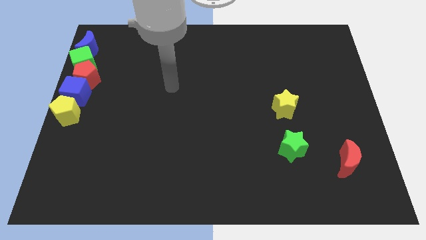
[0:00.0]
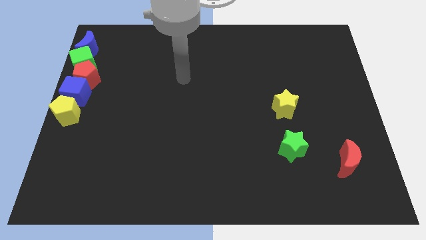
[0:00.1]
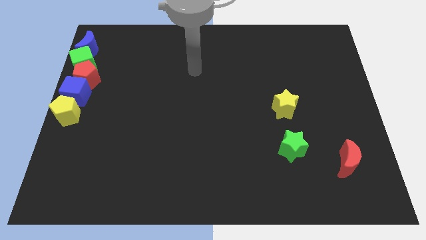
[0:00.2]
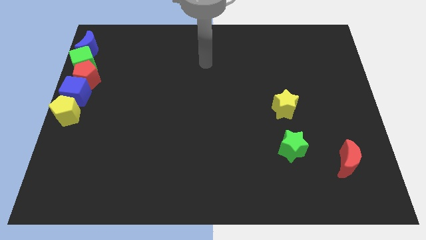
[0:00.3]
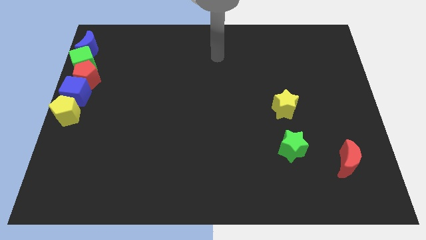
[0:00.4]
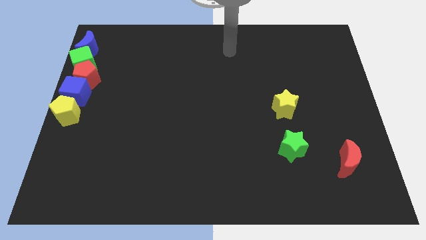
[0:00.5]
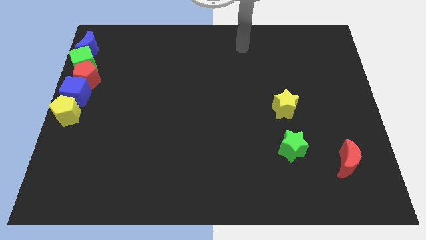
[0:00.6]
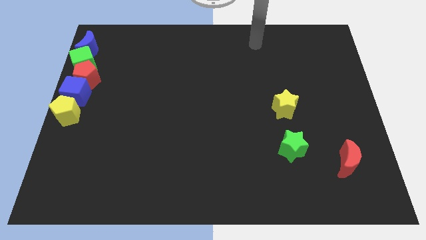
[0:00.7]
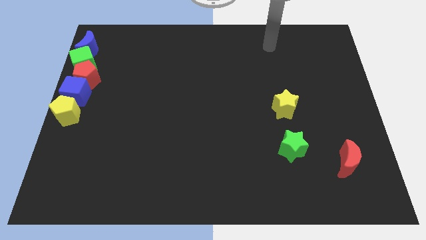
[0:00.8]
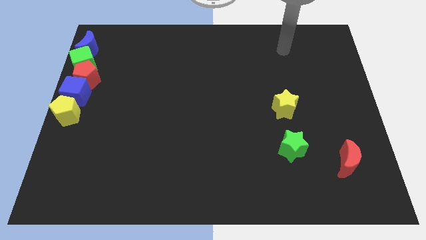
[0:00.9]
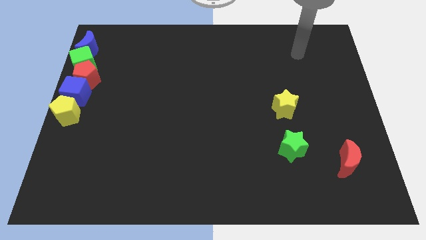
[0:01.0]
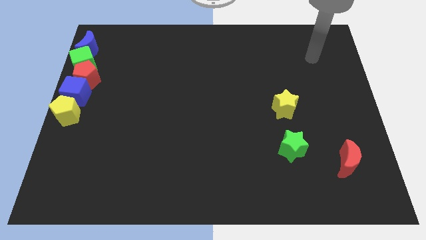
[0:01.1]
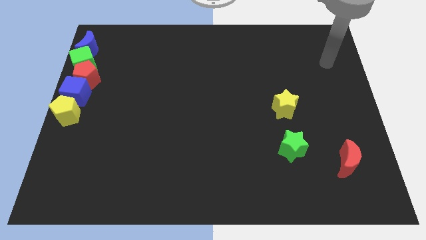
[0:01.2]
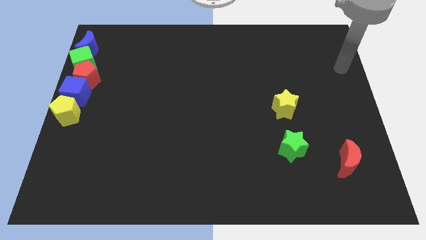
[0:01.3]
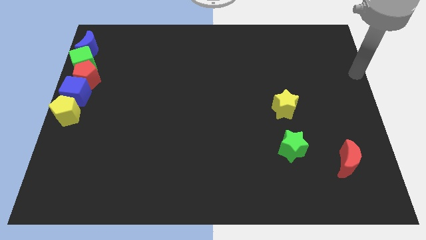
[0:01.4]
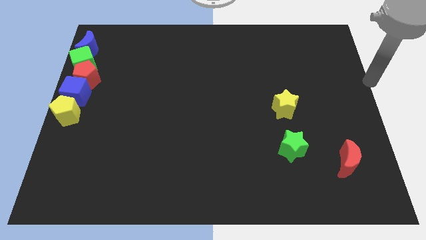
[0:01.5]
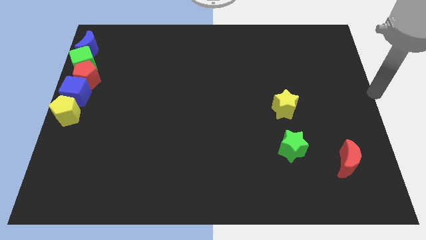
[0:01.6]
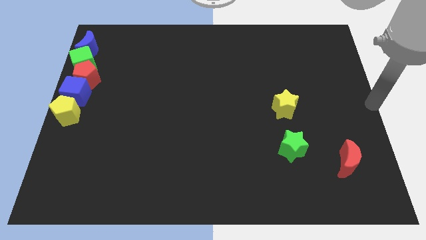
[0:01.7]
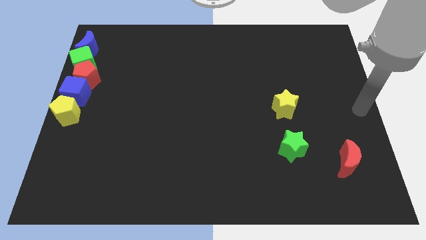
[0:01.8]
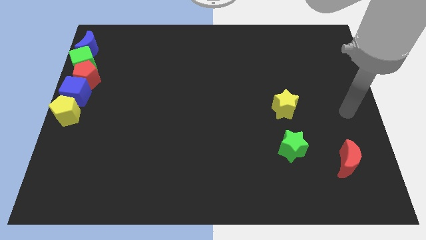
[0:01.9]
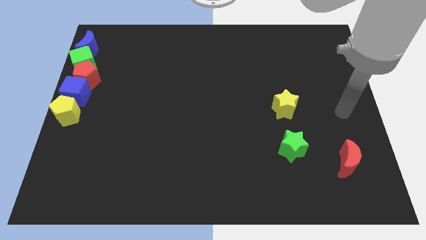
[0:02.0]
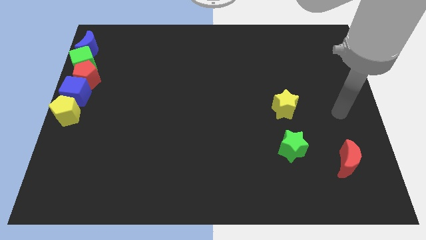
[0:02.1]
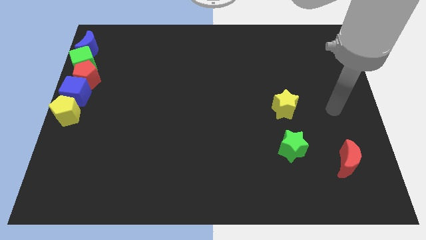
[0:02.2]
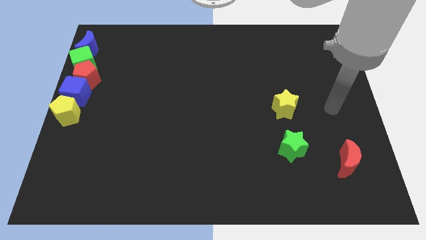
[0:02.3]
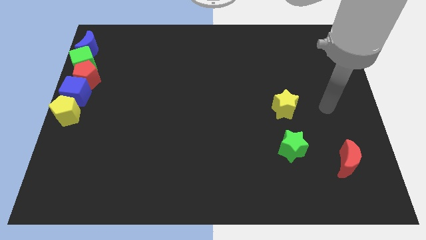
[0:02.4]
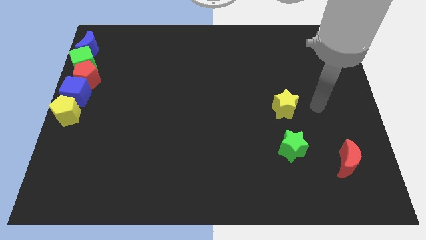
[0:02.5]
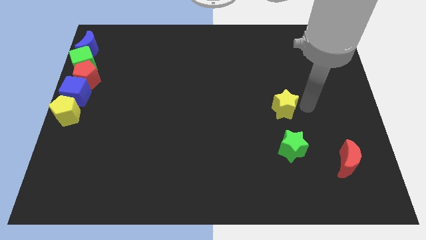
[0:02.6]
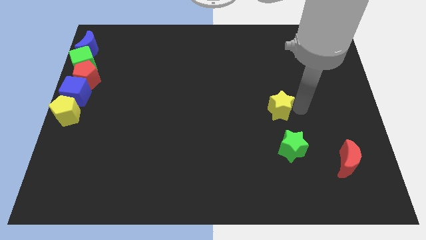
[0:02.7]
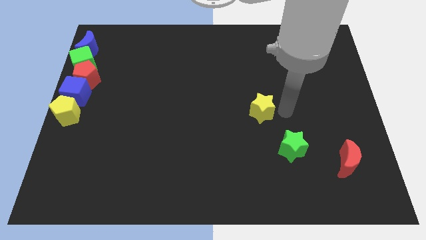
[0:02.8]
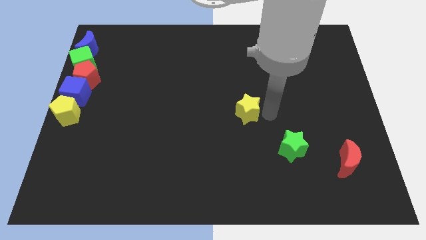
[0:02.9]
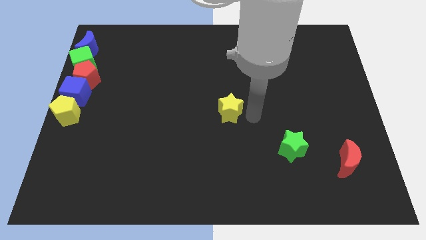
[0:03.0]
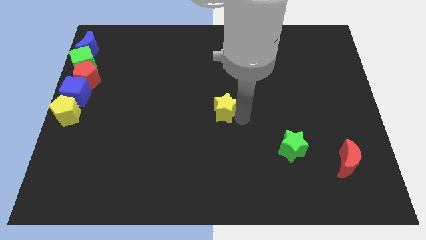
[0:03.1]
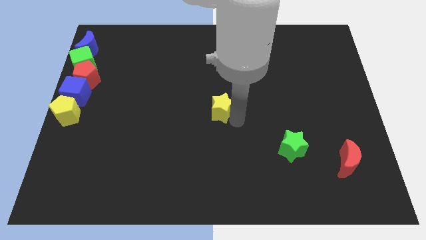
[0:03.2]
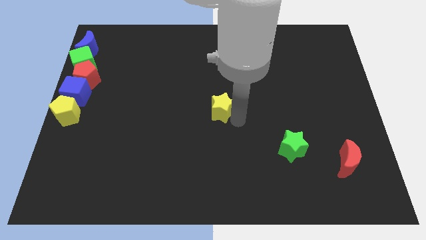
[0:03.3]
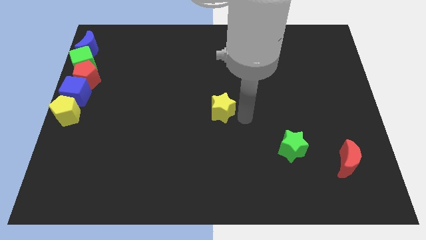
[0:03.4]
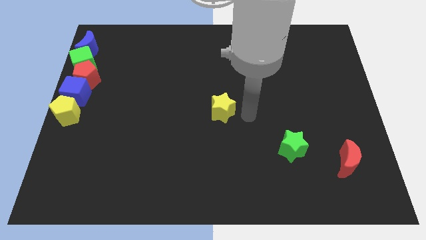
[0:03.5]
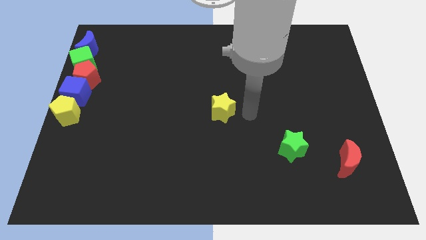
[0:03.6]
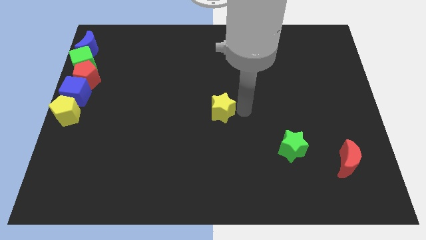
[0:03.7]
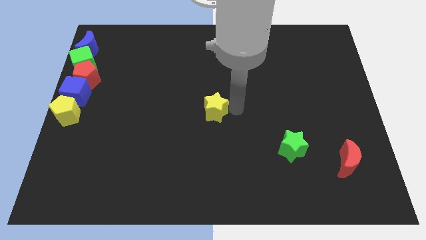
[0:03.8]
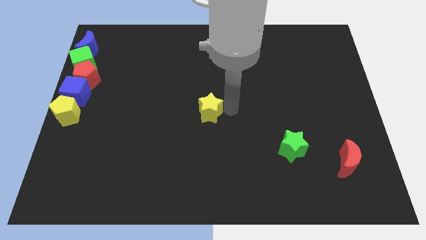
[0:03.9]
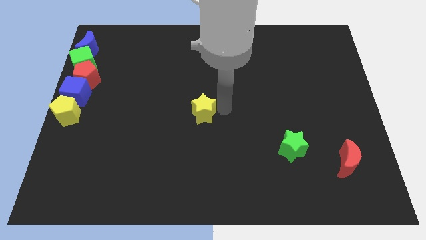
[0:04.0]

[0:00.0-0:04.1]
move the yellow star to the center of the board

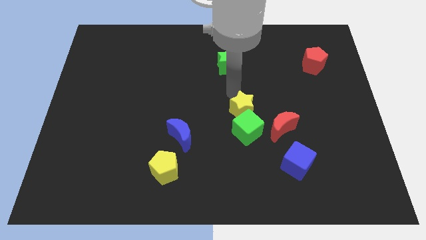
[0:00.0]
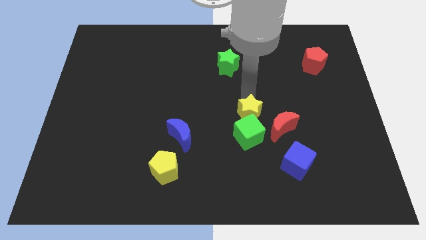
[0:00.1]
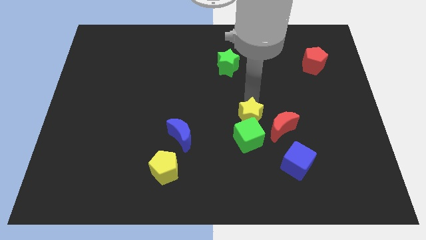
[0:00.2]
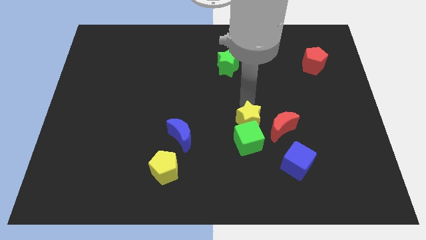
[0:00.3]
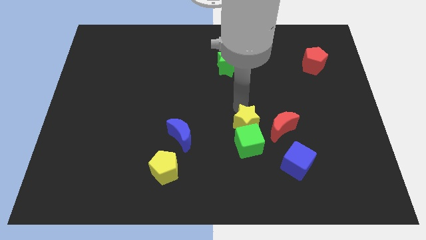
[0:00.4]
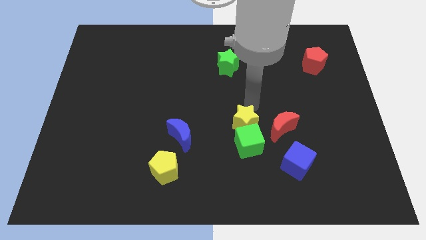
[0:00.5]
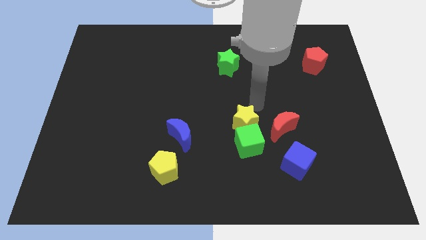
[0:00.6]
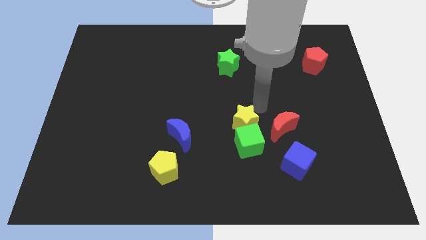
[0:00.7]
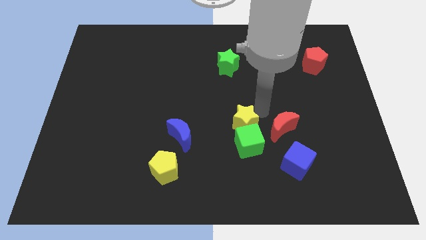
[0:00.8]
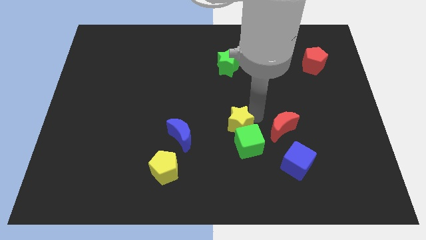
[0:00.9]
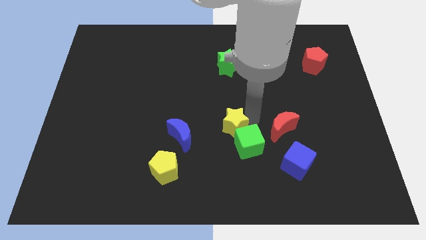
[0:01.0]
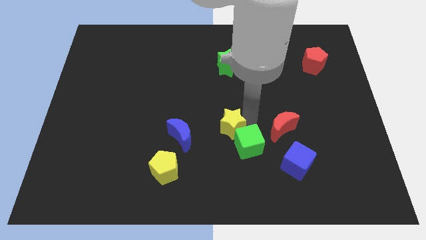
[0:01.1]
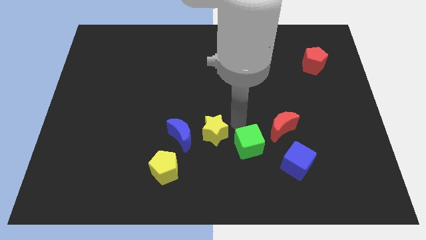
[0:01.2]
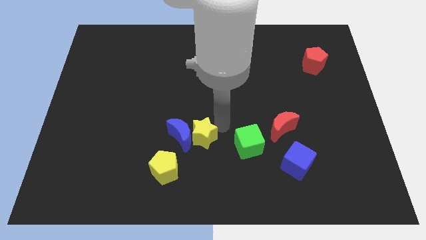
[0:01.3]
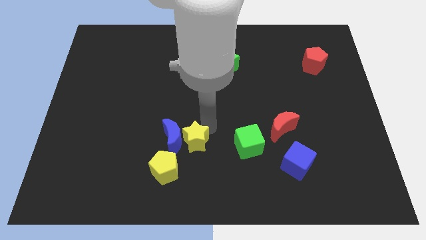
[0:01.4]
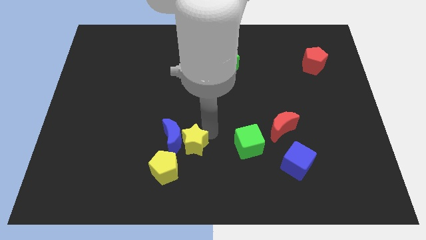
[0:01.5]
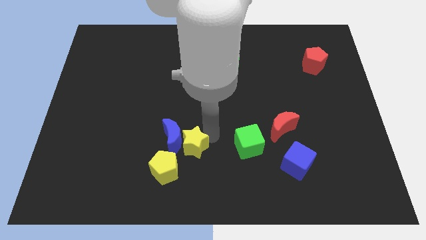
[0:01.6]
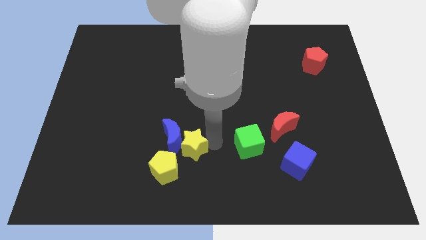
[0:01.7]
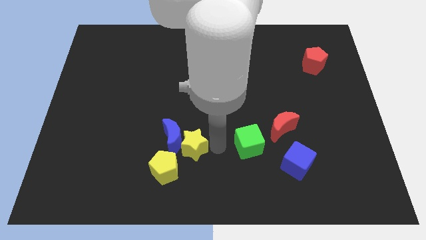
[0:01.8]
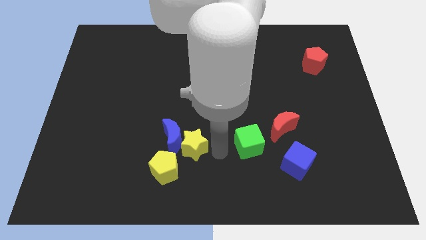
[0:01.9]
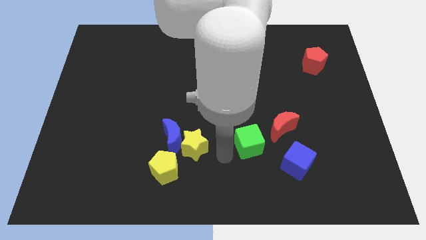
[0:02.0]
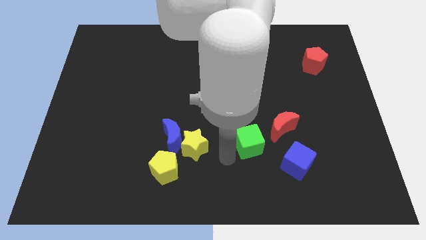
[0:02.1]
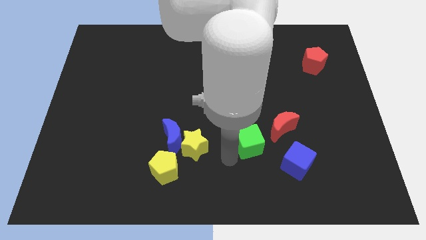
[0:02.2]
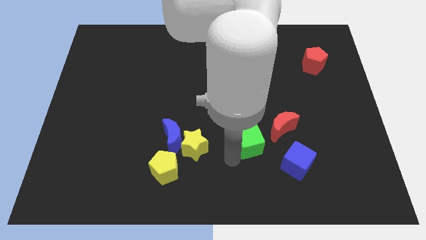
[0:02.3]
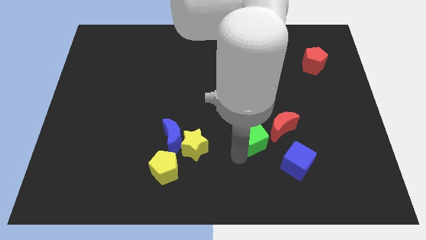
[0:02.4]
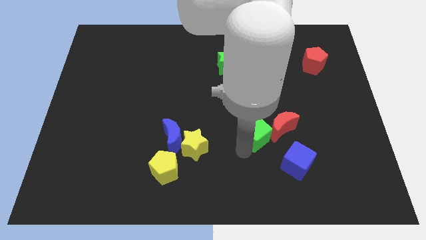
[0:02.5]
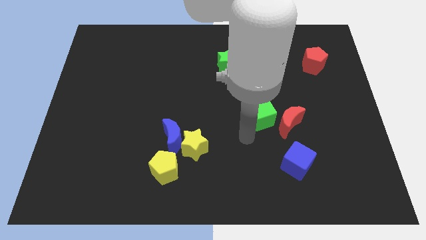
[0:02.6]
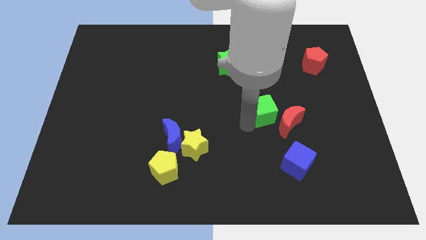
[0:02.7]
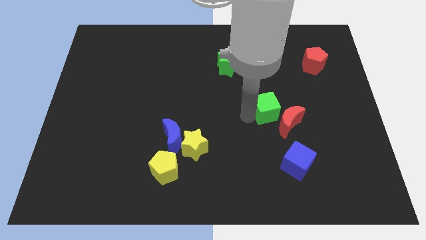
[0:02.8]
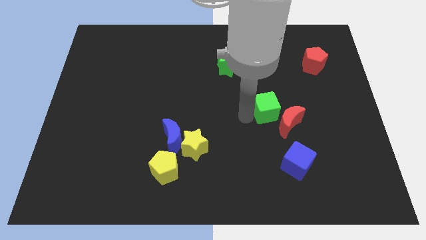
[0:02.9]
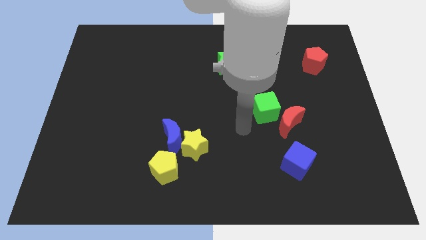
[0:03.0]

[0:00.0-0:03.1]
separate yellow star and green cube

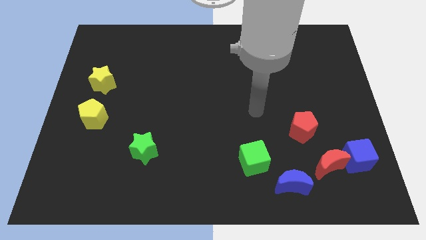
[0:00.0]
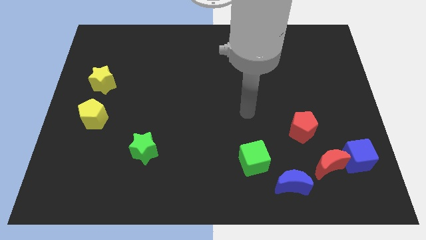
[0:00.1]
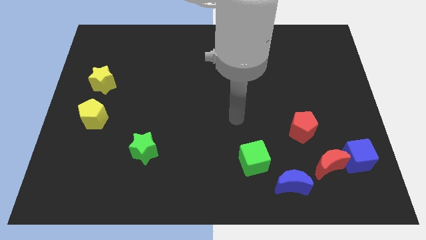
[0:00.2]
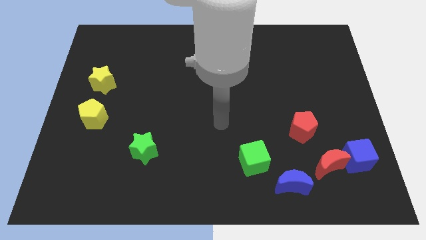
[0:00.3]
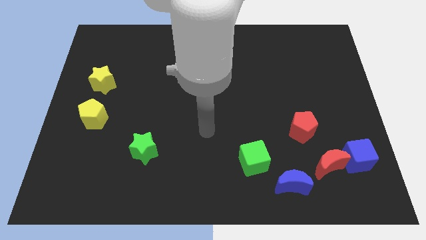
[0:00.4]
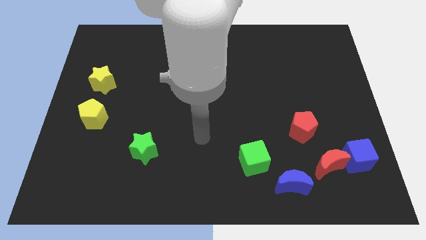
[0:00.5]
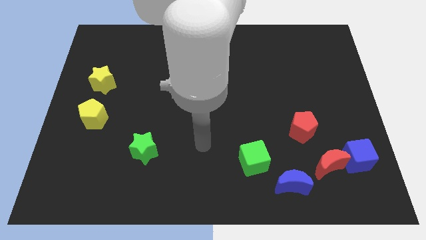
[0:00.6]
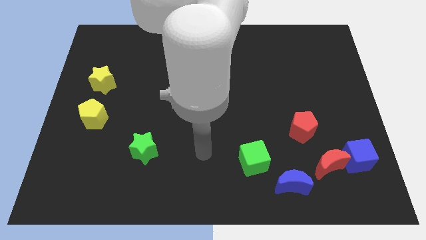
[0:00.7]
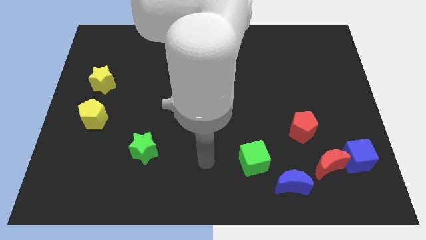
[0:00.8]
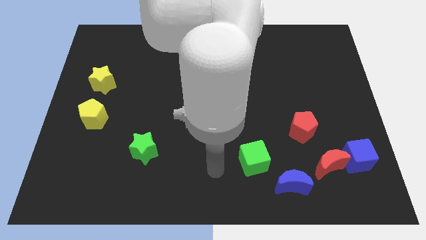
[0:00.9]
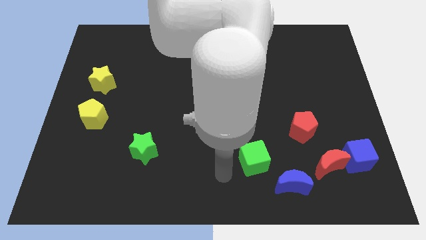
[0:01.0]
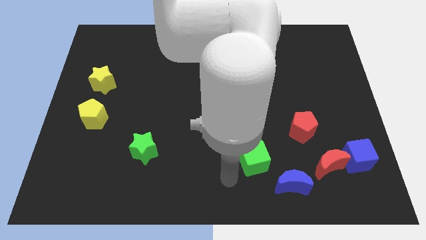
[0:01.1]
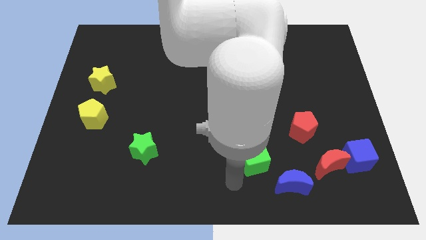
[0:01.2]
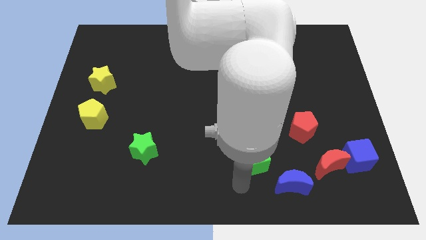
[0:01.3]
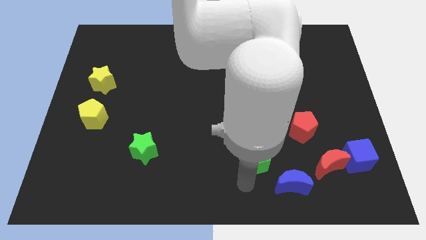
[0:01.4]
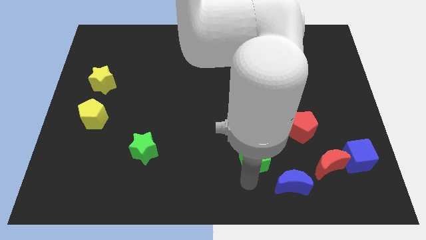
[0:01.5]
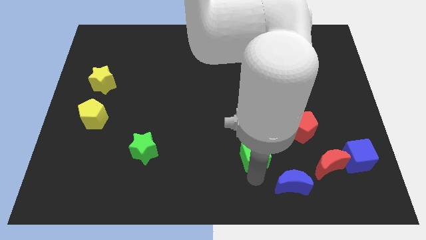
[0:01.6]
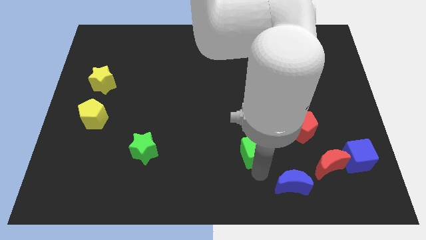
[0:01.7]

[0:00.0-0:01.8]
tap the bottom side of the green cube
